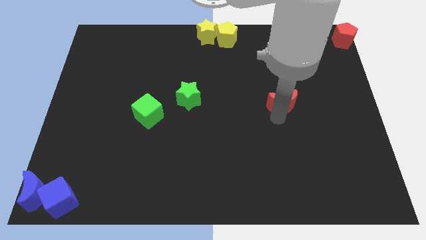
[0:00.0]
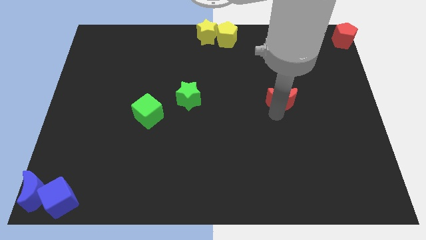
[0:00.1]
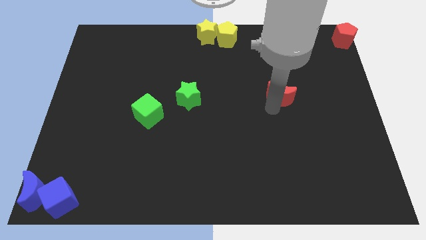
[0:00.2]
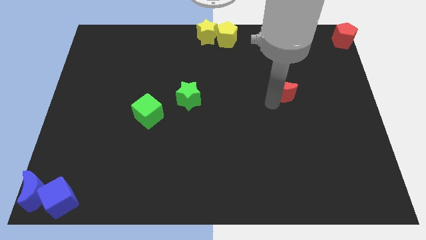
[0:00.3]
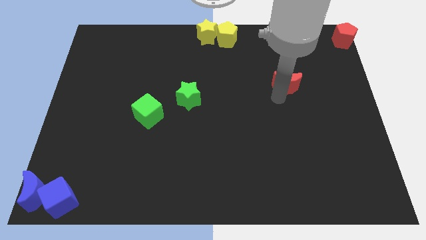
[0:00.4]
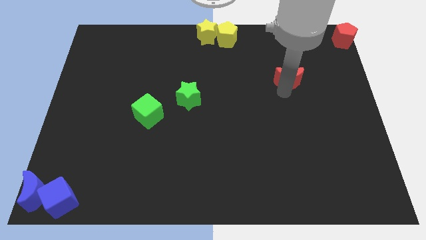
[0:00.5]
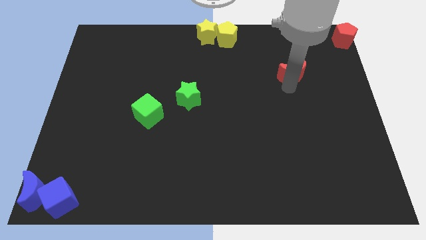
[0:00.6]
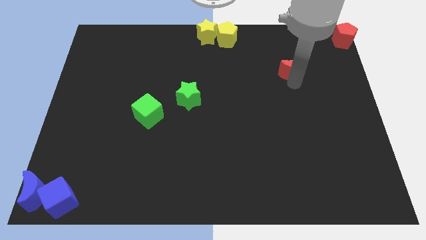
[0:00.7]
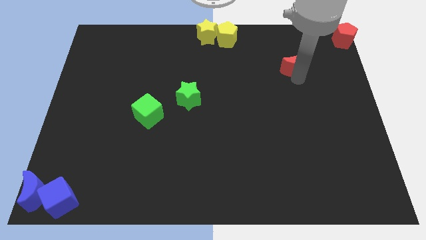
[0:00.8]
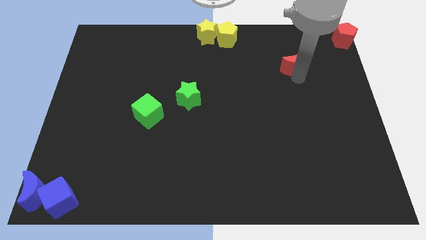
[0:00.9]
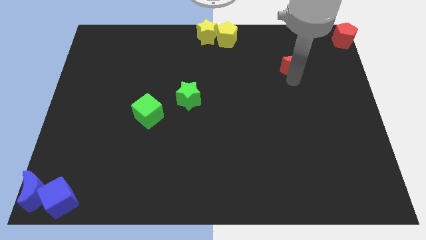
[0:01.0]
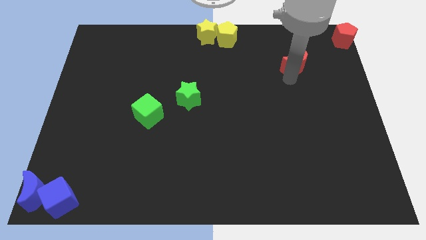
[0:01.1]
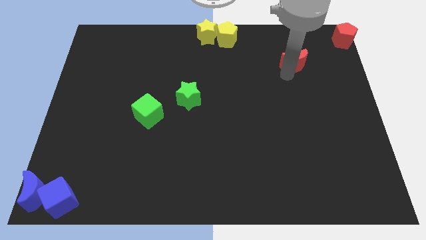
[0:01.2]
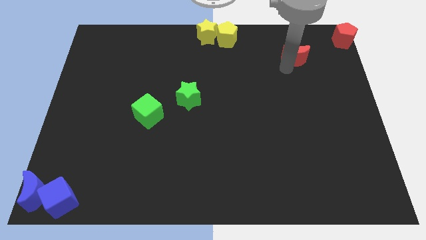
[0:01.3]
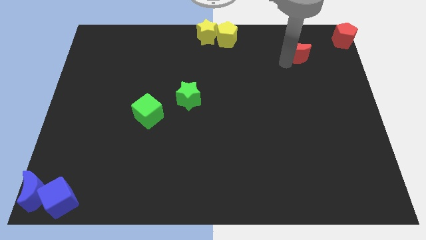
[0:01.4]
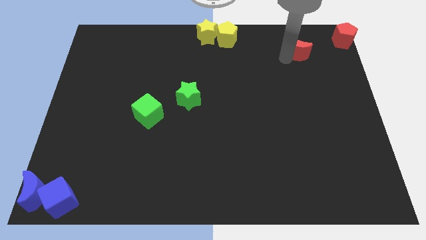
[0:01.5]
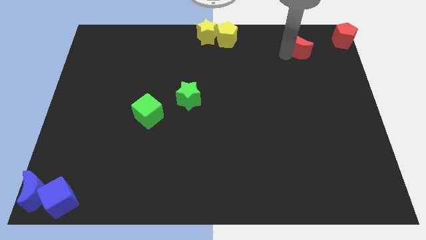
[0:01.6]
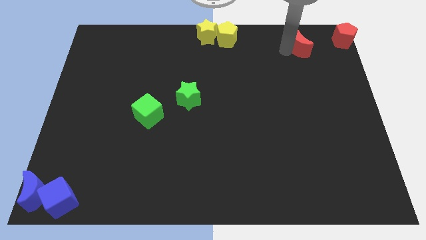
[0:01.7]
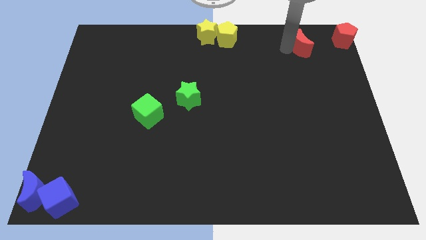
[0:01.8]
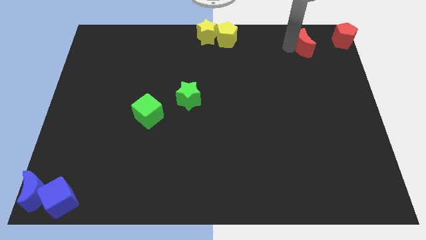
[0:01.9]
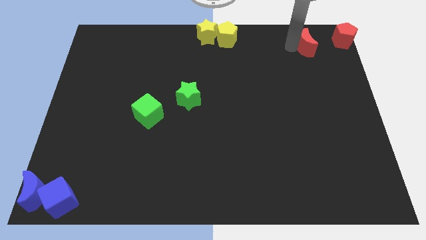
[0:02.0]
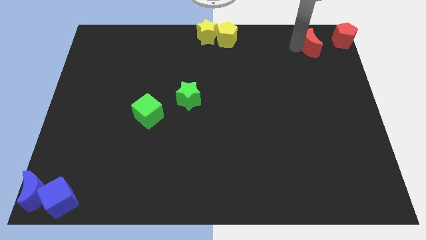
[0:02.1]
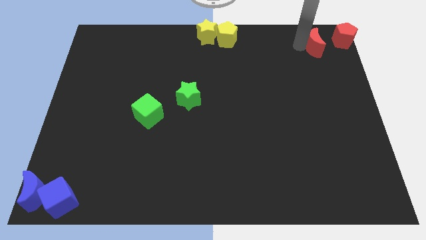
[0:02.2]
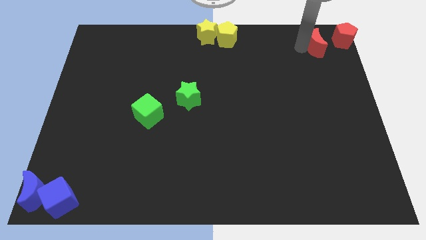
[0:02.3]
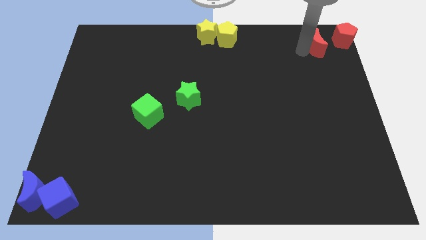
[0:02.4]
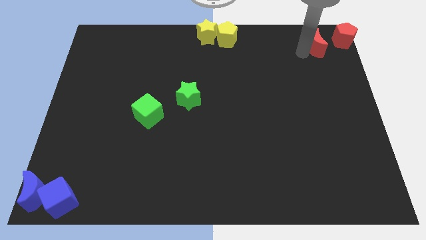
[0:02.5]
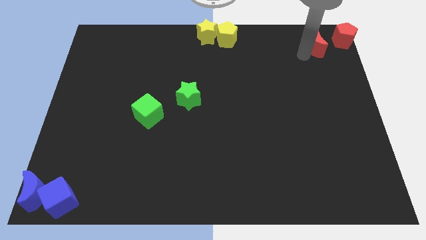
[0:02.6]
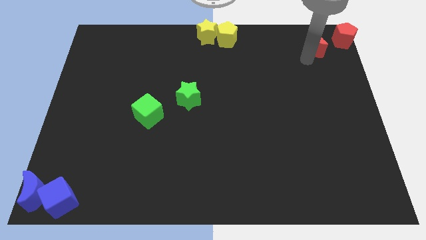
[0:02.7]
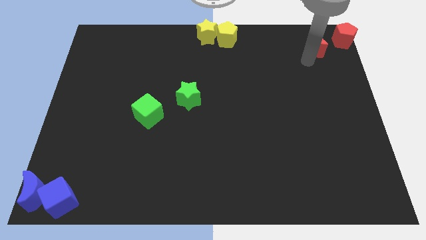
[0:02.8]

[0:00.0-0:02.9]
place the red moon on the left side of the red pentagon

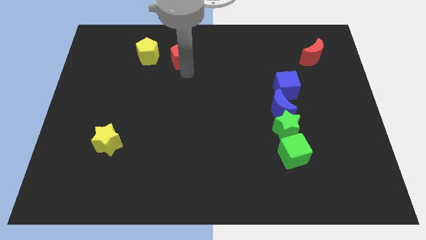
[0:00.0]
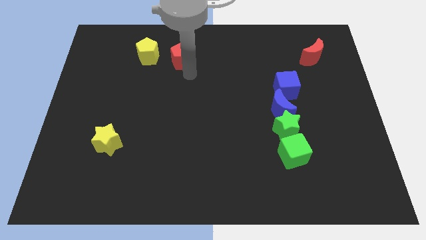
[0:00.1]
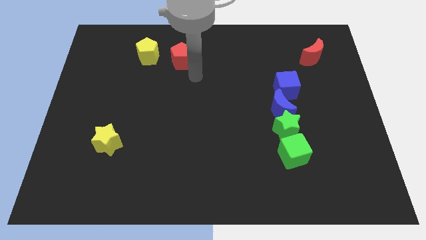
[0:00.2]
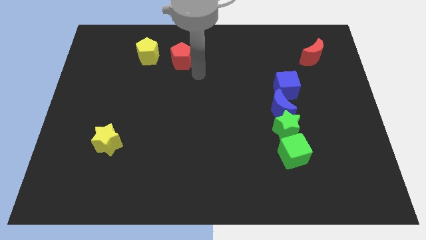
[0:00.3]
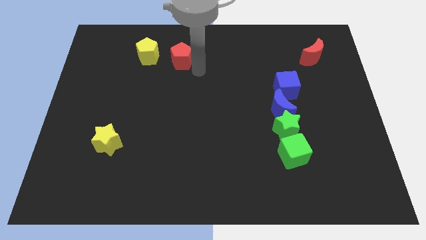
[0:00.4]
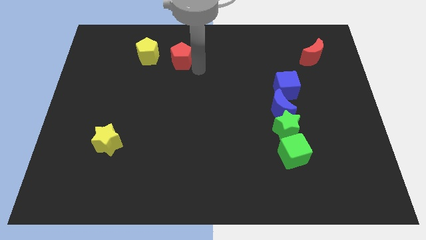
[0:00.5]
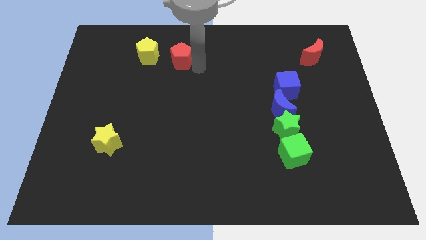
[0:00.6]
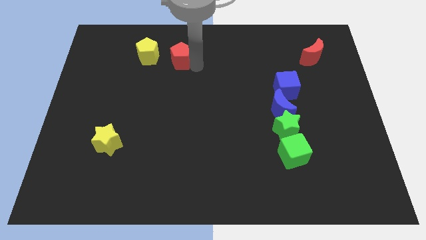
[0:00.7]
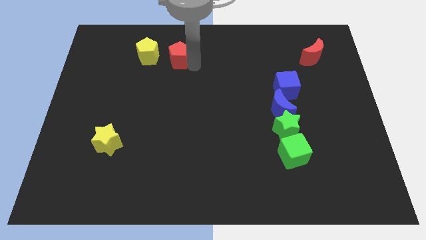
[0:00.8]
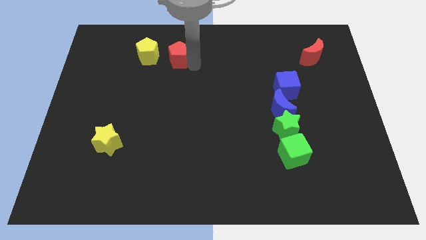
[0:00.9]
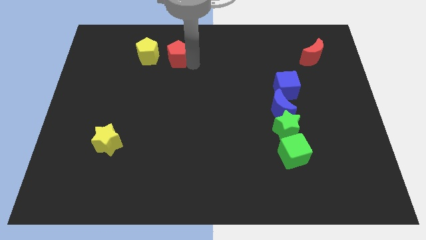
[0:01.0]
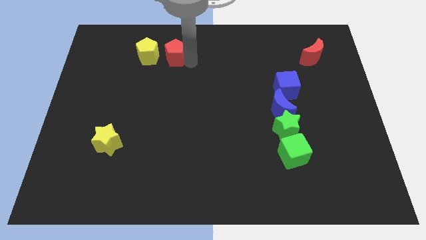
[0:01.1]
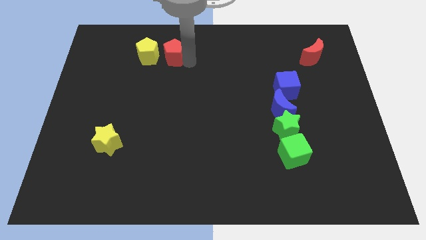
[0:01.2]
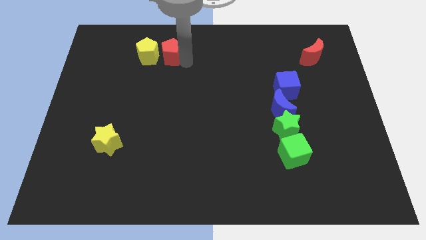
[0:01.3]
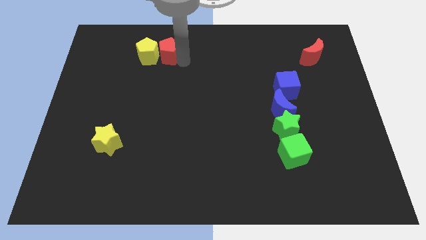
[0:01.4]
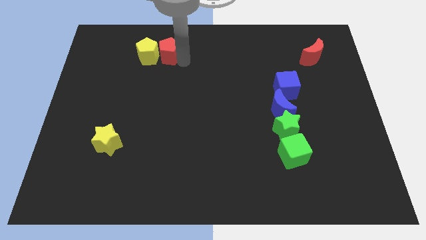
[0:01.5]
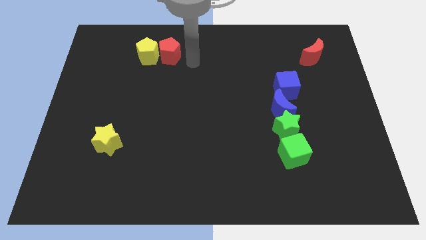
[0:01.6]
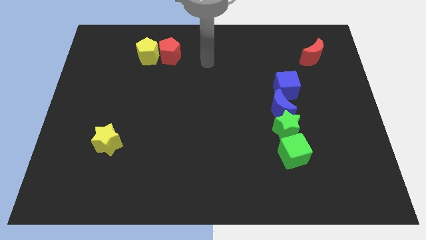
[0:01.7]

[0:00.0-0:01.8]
push the red pentagon to the right side of the yellow pentagon

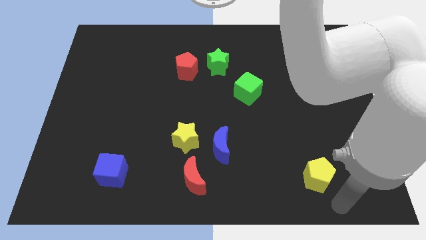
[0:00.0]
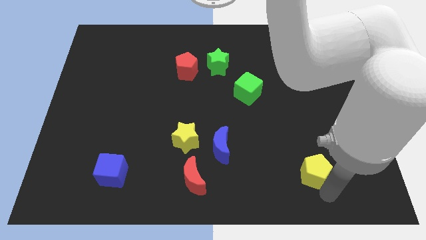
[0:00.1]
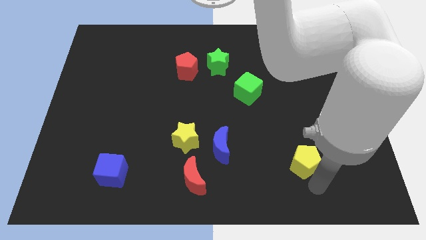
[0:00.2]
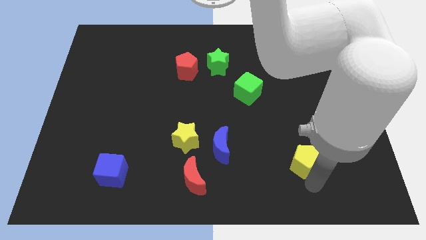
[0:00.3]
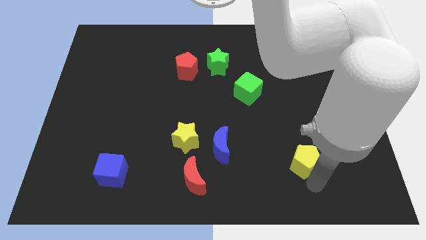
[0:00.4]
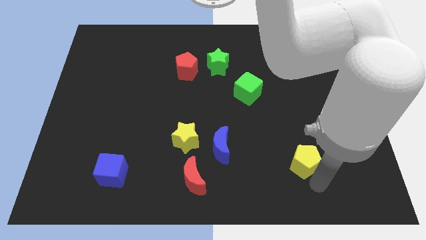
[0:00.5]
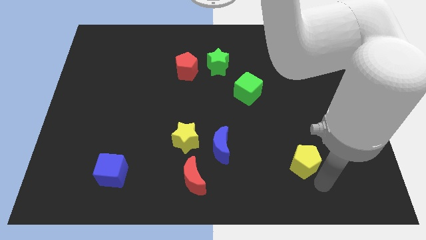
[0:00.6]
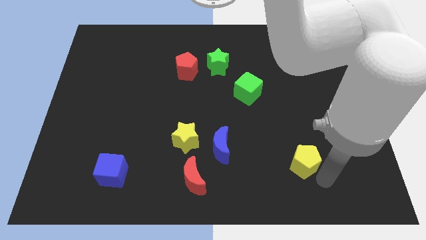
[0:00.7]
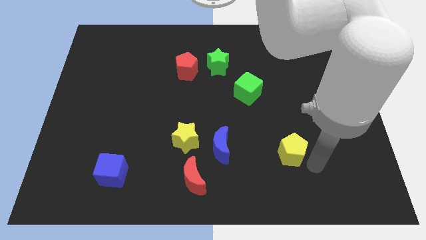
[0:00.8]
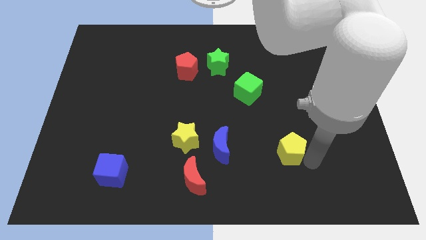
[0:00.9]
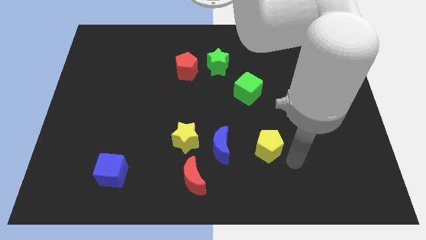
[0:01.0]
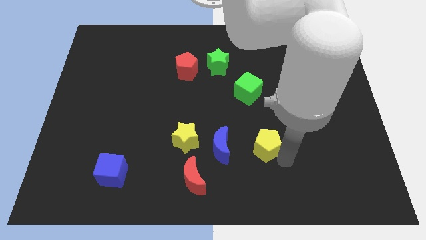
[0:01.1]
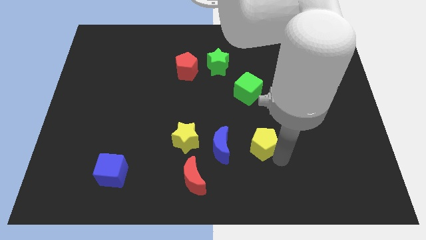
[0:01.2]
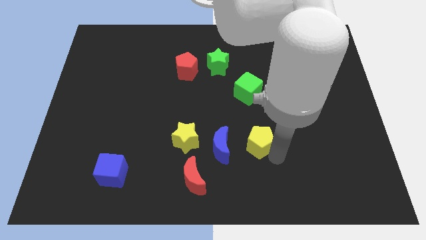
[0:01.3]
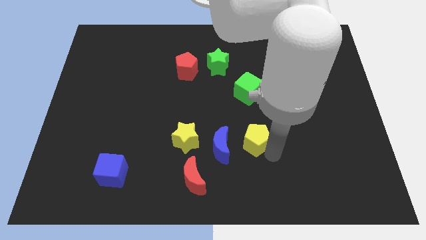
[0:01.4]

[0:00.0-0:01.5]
place the yellow pentagon to the right of the blue moon

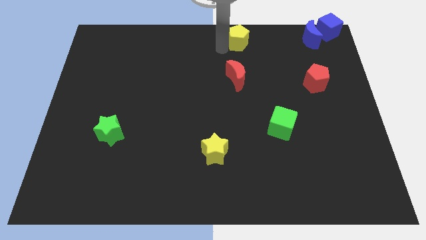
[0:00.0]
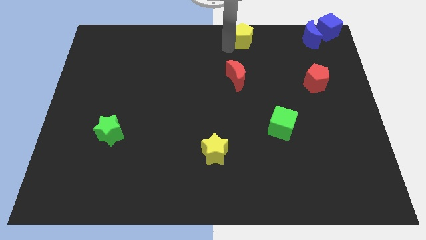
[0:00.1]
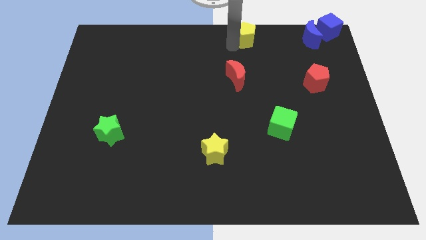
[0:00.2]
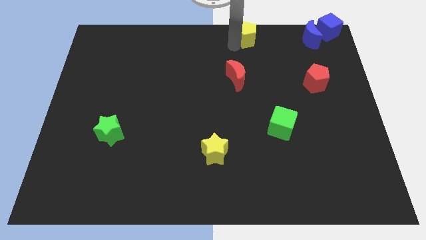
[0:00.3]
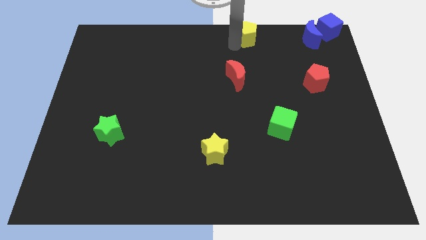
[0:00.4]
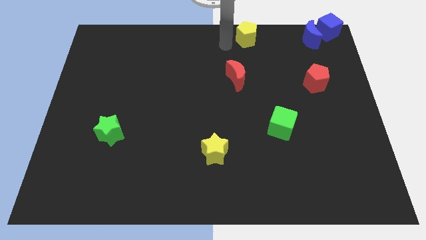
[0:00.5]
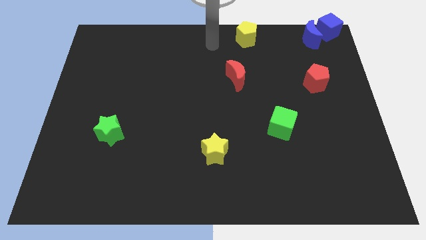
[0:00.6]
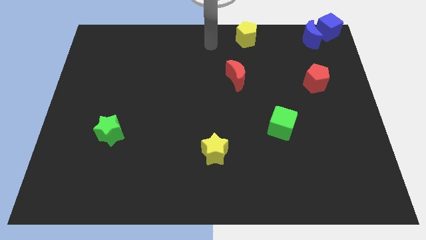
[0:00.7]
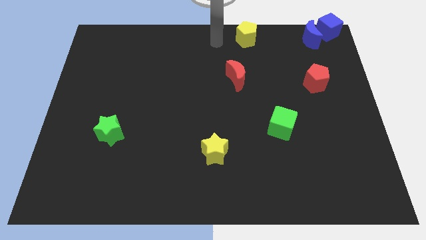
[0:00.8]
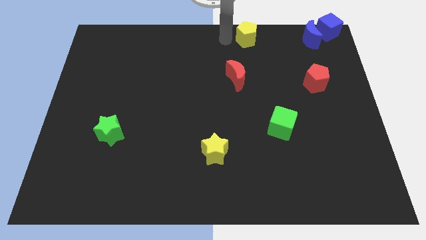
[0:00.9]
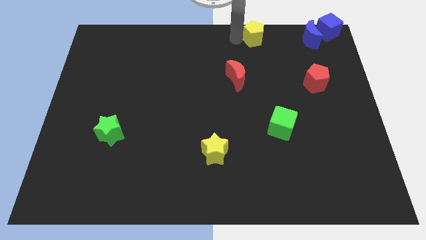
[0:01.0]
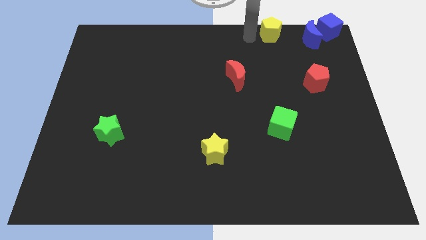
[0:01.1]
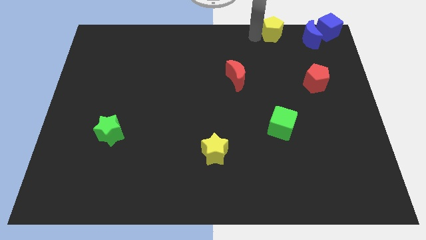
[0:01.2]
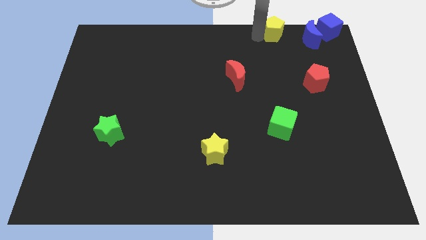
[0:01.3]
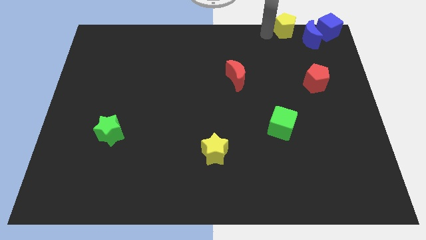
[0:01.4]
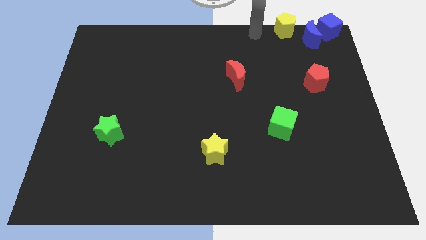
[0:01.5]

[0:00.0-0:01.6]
move the yellow pentagon towards the blue moon

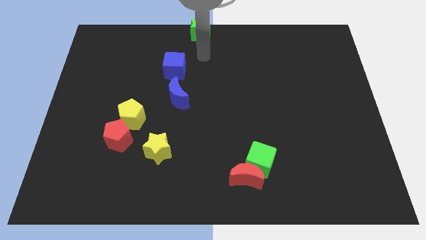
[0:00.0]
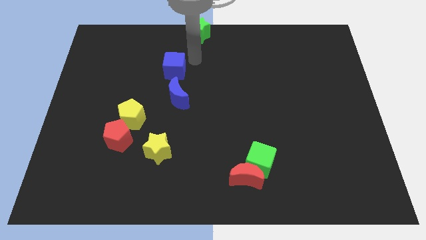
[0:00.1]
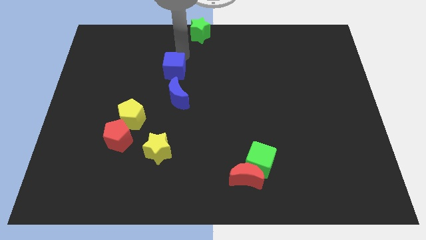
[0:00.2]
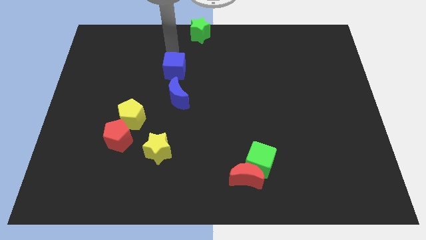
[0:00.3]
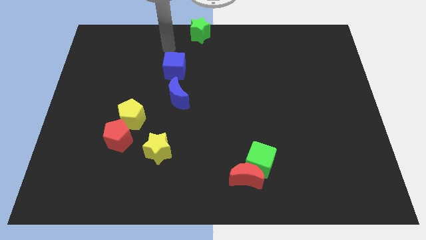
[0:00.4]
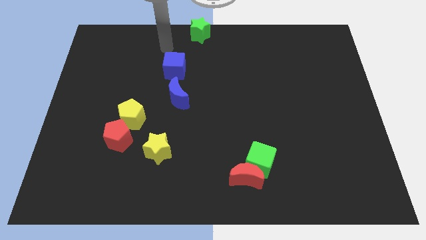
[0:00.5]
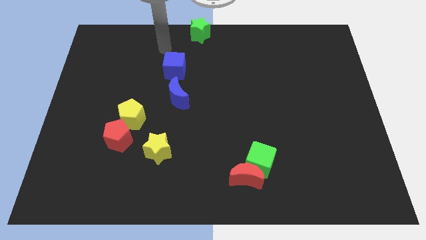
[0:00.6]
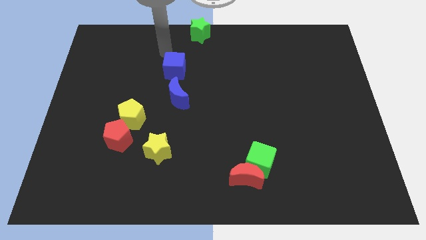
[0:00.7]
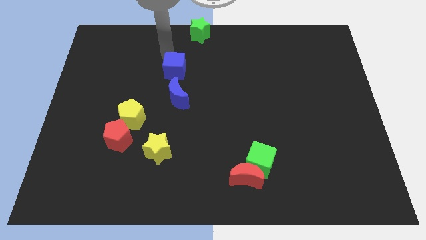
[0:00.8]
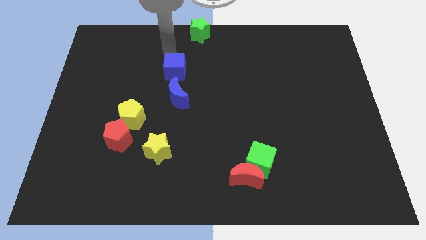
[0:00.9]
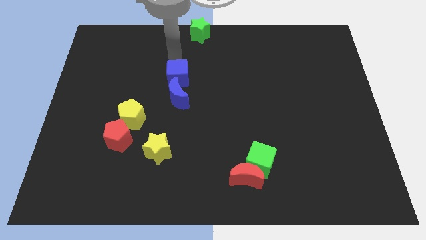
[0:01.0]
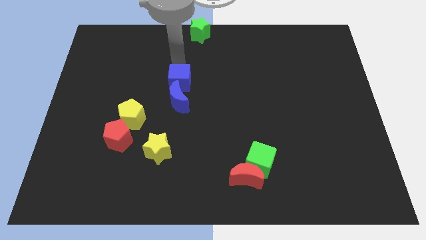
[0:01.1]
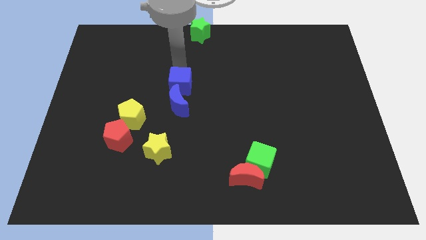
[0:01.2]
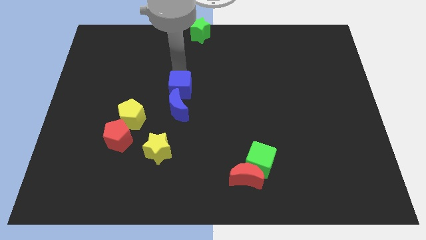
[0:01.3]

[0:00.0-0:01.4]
push the blue cube above the blue crescent
